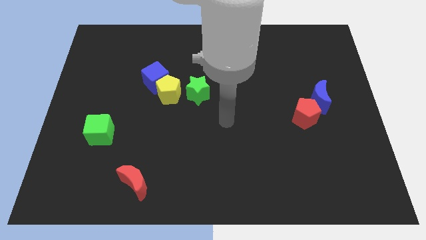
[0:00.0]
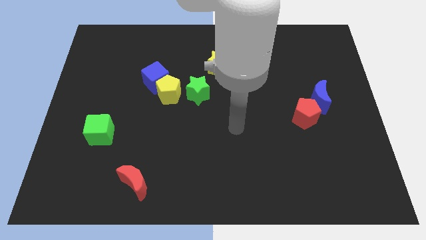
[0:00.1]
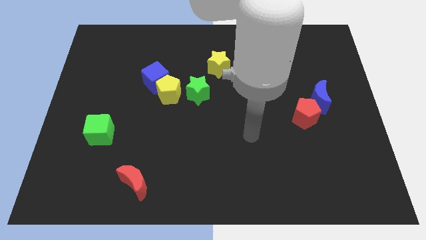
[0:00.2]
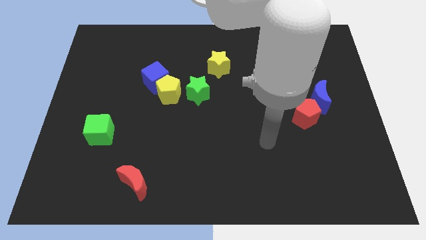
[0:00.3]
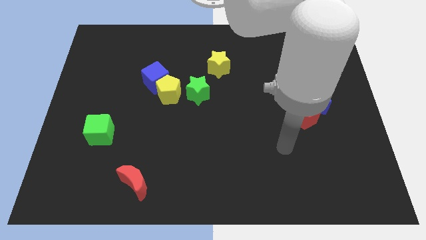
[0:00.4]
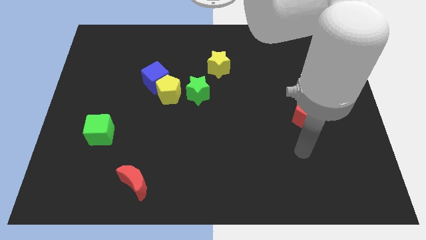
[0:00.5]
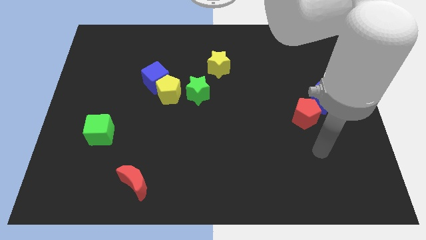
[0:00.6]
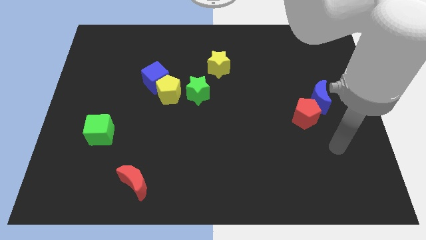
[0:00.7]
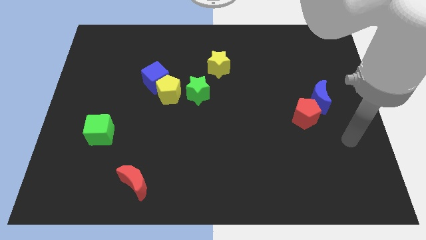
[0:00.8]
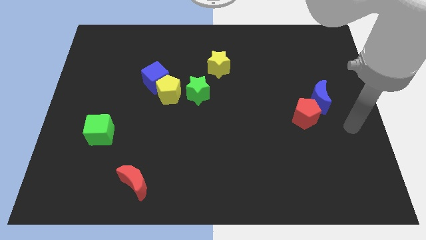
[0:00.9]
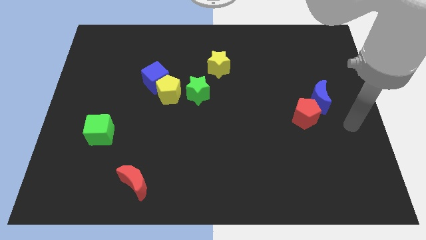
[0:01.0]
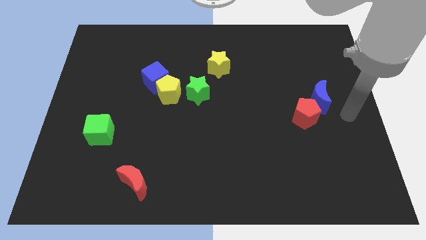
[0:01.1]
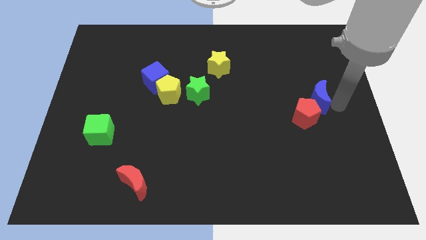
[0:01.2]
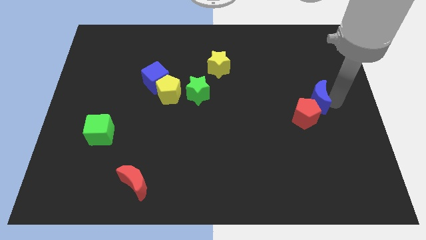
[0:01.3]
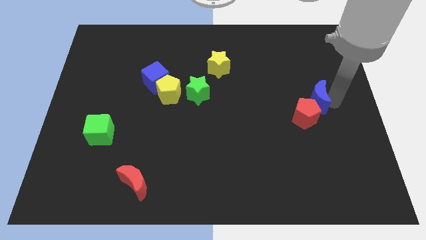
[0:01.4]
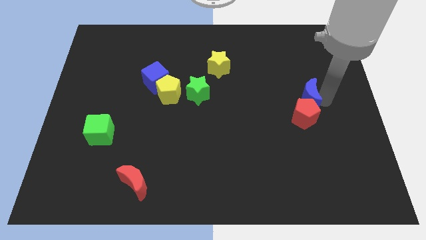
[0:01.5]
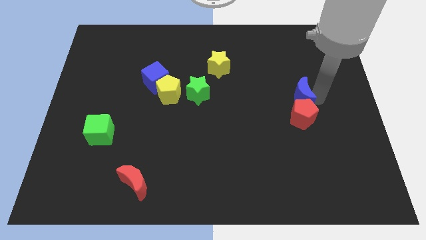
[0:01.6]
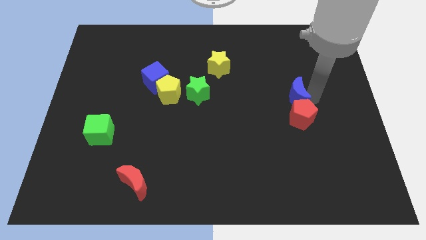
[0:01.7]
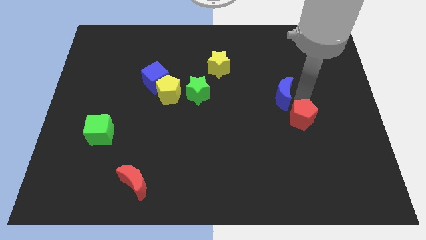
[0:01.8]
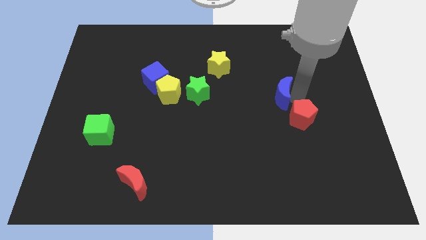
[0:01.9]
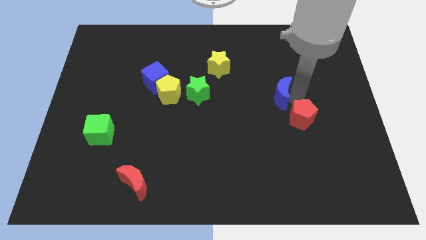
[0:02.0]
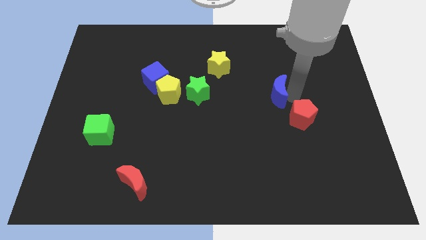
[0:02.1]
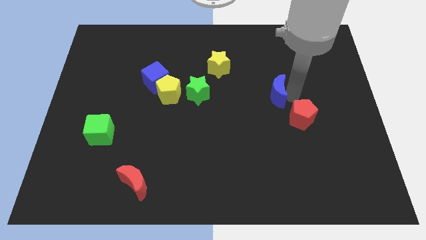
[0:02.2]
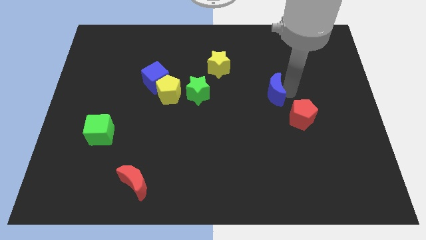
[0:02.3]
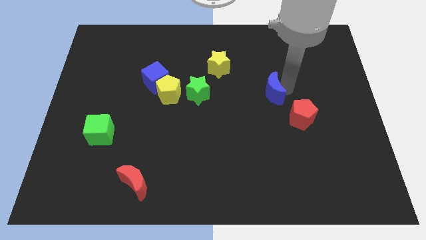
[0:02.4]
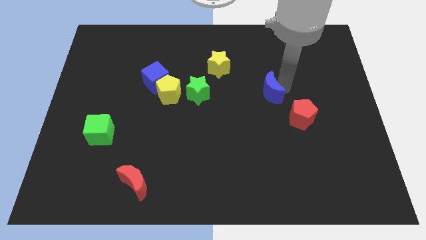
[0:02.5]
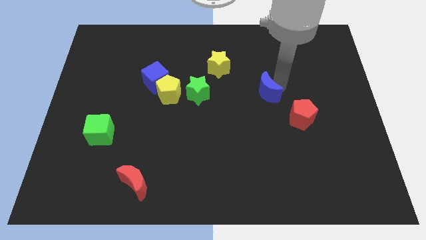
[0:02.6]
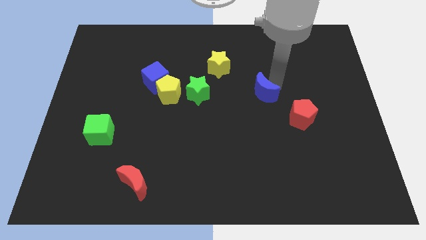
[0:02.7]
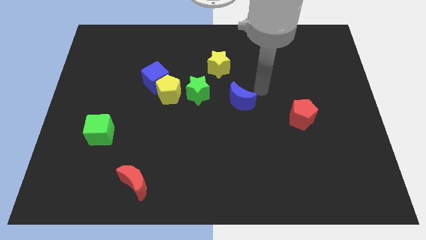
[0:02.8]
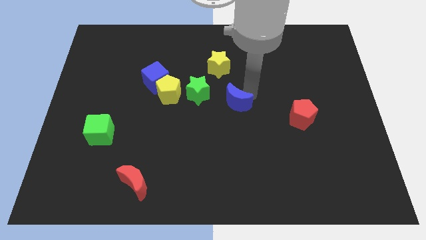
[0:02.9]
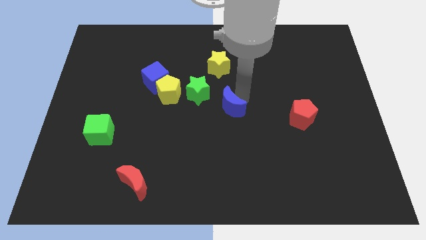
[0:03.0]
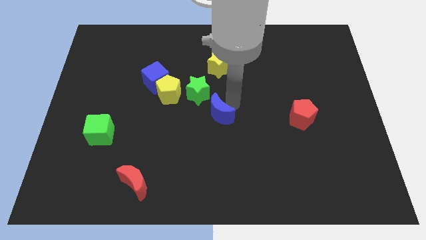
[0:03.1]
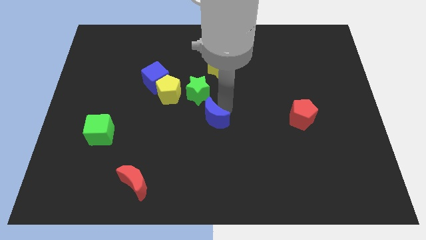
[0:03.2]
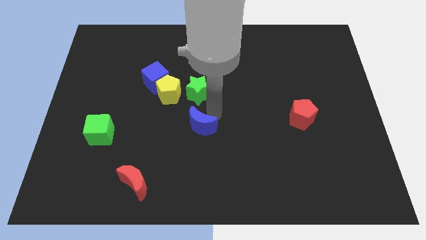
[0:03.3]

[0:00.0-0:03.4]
push the blue crescent to the center of the board

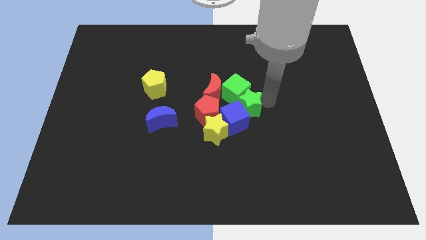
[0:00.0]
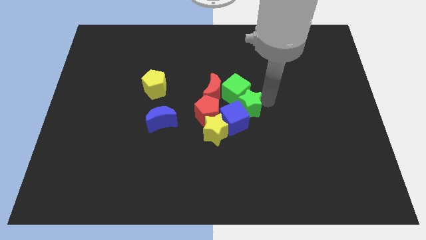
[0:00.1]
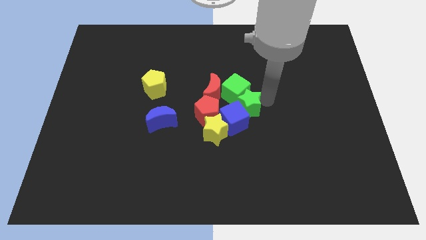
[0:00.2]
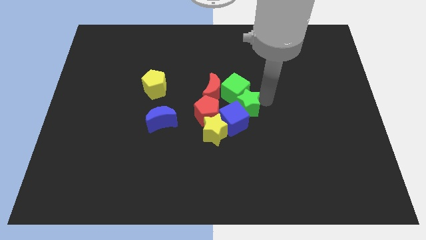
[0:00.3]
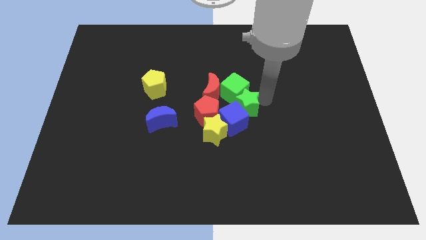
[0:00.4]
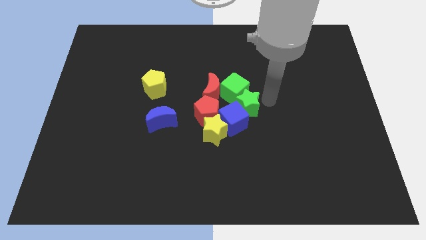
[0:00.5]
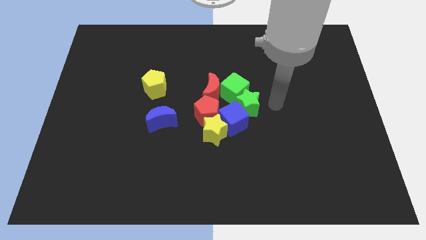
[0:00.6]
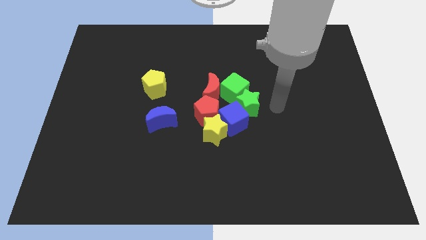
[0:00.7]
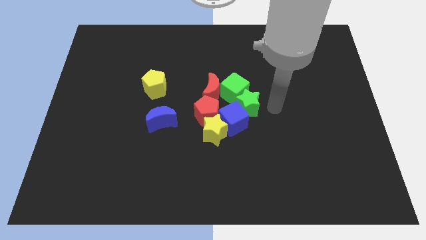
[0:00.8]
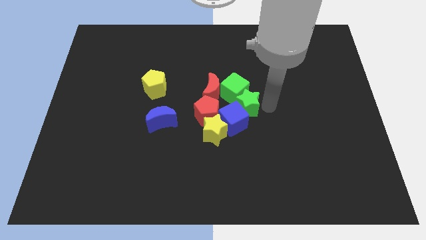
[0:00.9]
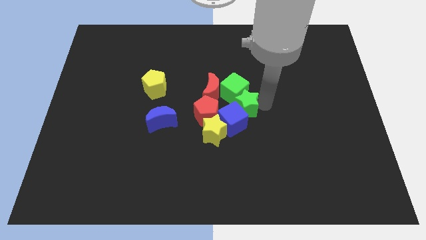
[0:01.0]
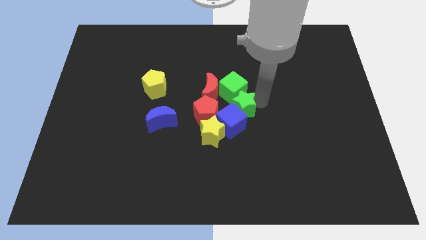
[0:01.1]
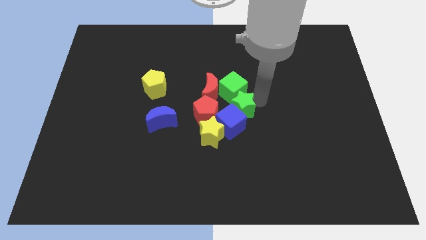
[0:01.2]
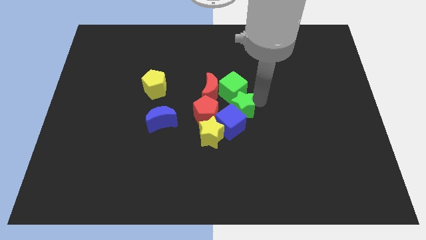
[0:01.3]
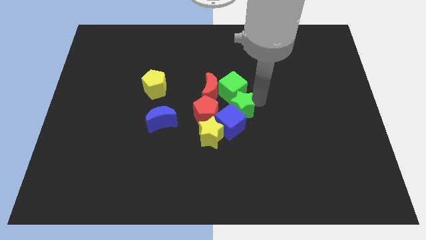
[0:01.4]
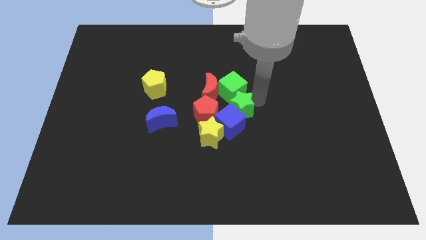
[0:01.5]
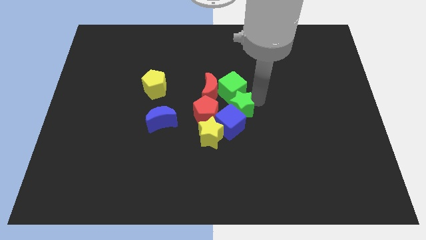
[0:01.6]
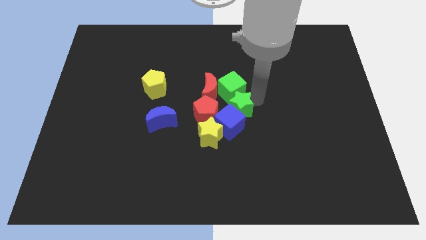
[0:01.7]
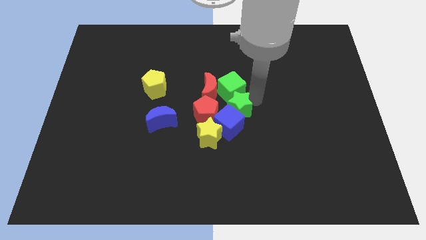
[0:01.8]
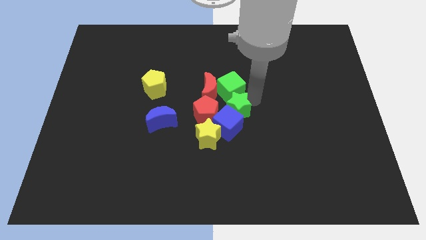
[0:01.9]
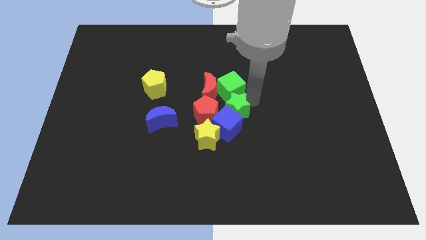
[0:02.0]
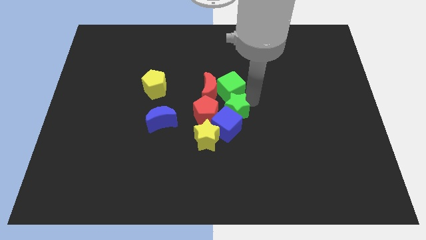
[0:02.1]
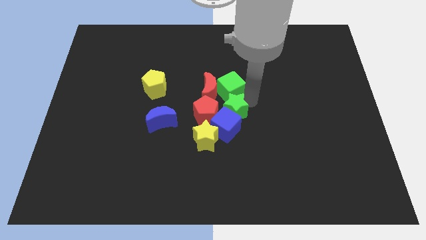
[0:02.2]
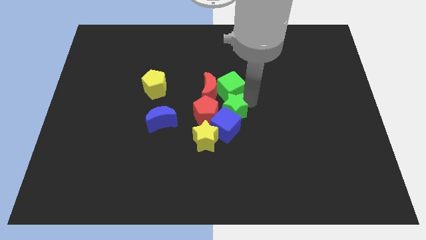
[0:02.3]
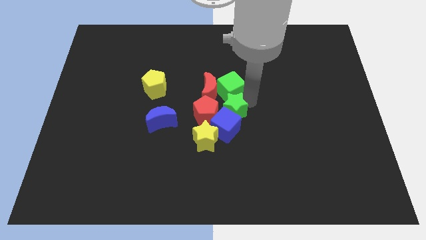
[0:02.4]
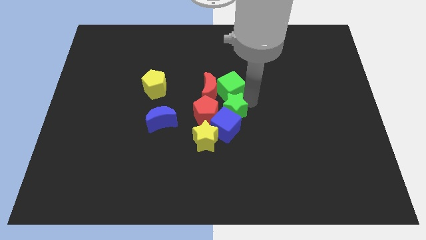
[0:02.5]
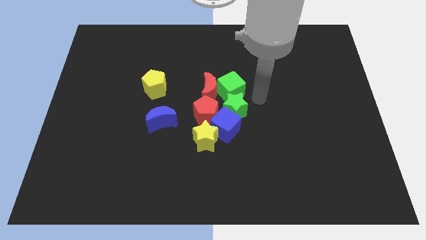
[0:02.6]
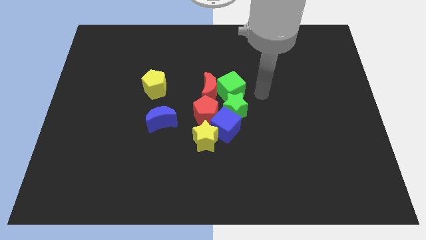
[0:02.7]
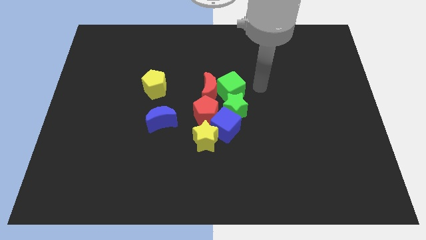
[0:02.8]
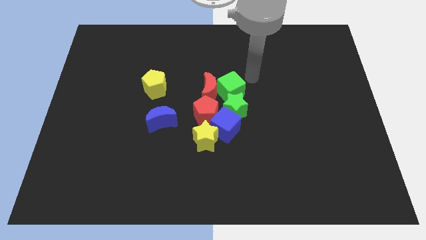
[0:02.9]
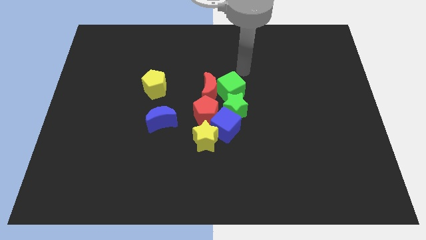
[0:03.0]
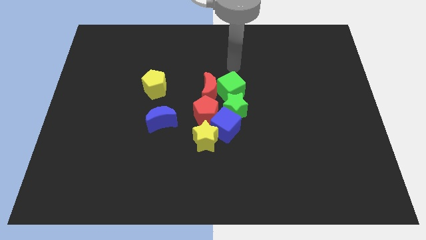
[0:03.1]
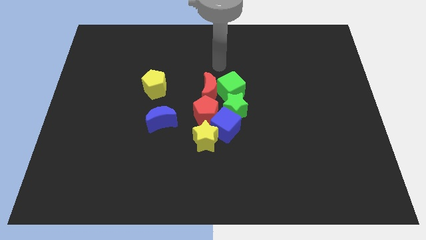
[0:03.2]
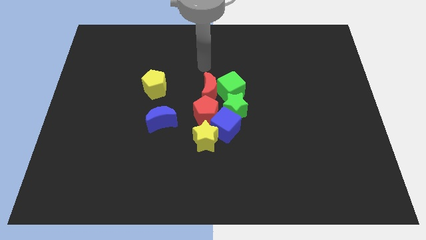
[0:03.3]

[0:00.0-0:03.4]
push the green star slightly to the down

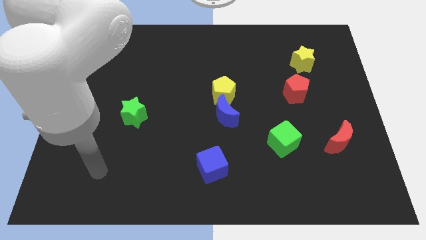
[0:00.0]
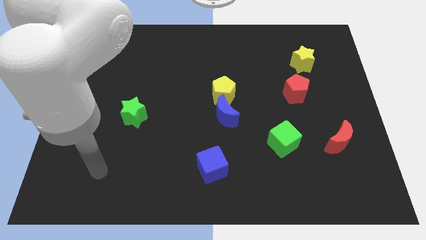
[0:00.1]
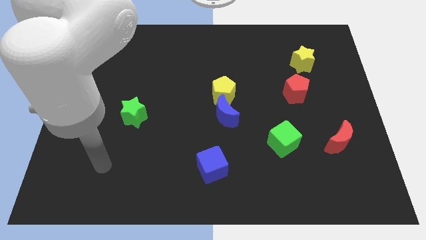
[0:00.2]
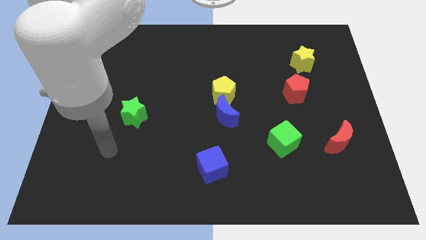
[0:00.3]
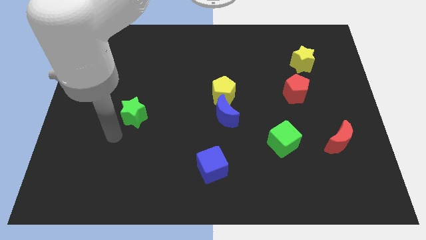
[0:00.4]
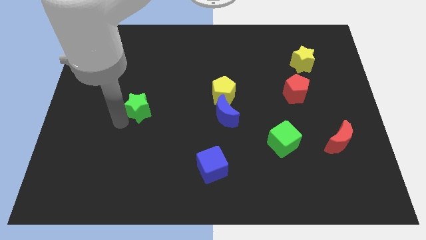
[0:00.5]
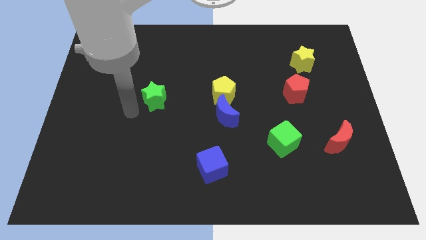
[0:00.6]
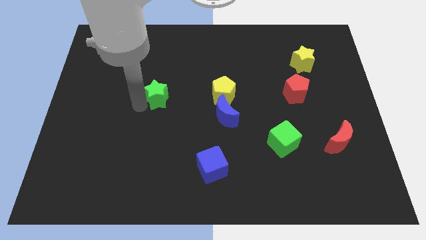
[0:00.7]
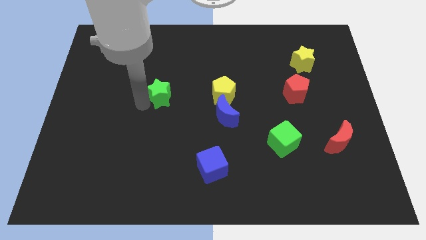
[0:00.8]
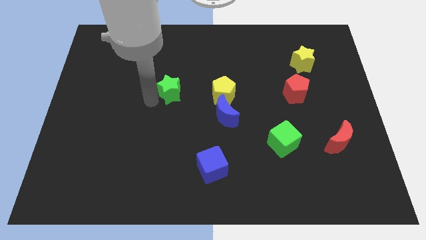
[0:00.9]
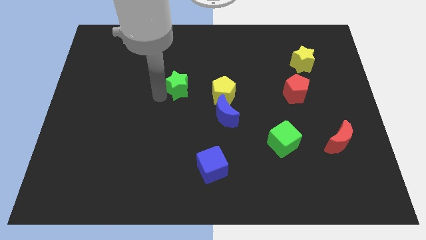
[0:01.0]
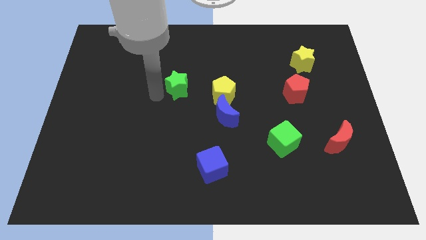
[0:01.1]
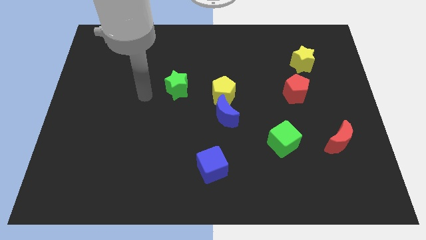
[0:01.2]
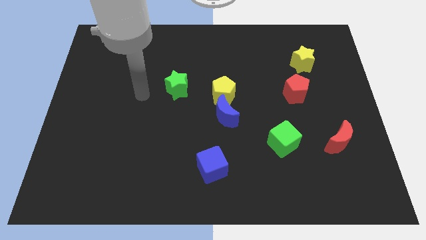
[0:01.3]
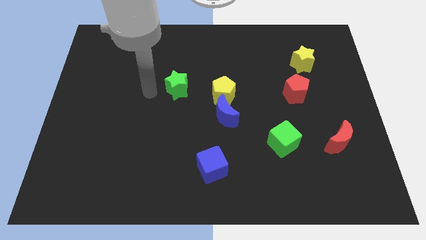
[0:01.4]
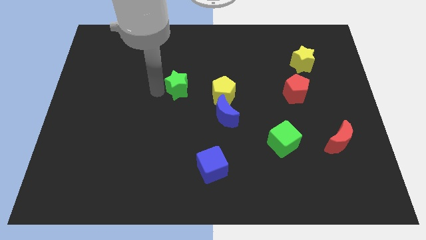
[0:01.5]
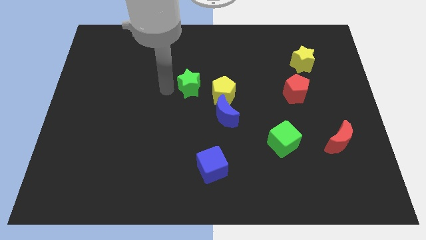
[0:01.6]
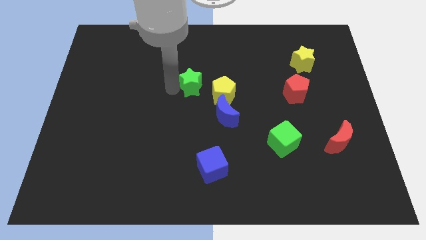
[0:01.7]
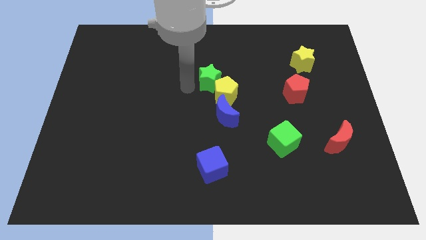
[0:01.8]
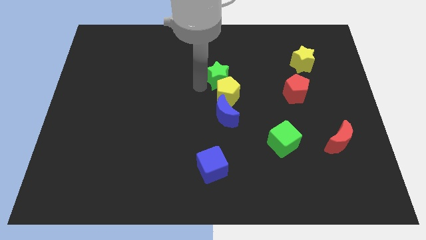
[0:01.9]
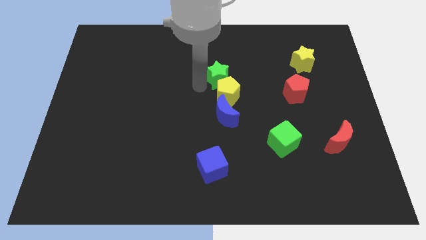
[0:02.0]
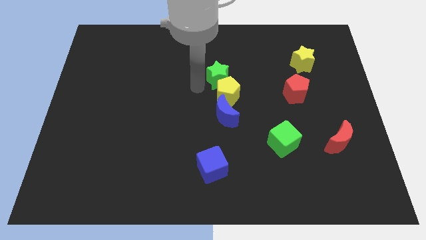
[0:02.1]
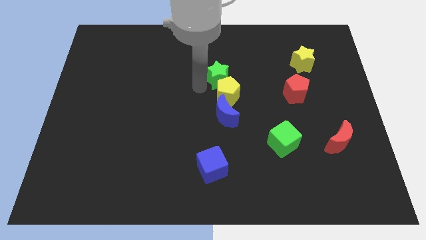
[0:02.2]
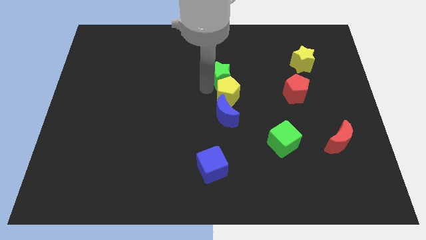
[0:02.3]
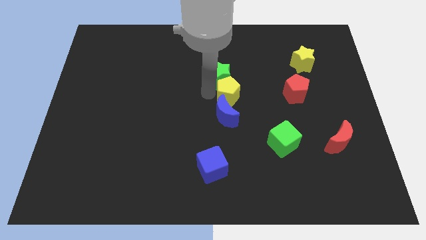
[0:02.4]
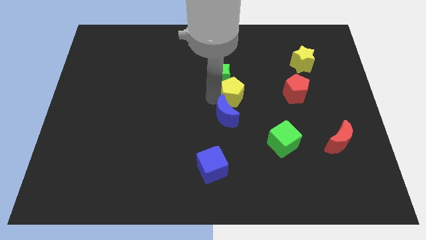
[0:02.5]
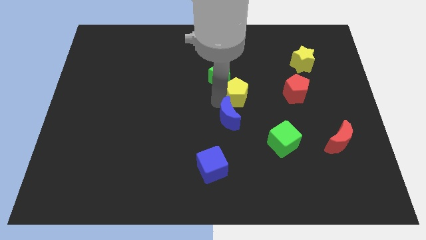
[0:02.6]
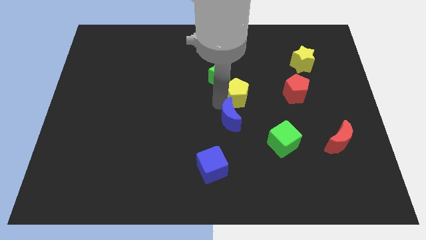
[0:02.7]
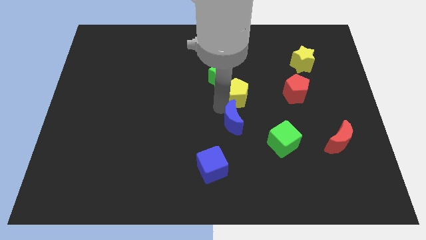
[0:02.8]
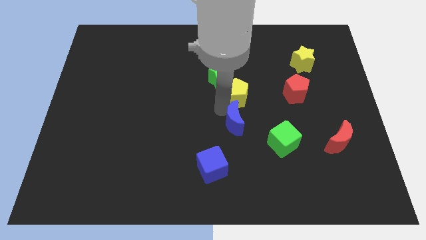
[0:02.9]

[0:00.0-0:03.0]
place green star above yellow pentagon
